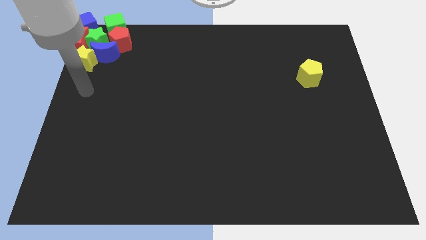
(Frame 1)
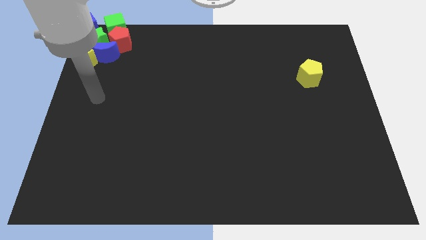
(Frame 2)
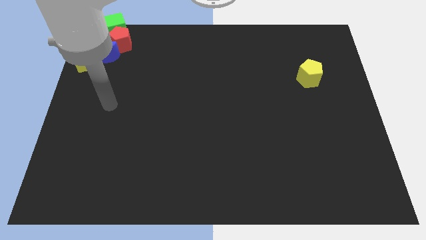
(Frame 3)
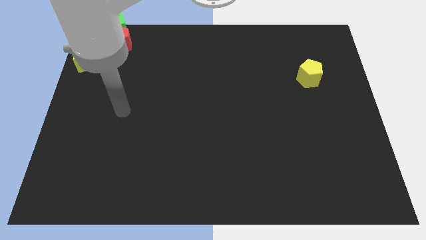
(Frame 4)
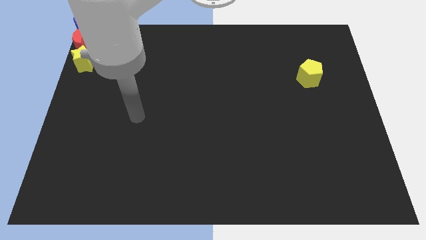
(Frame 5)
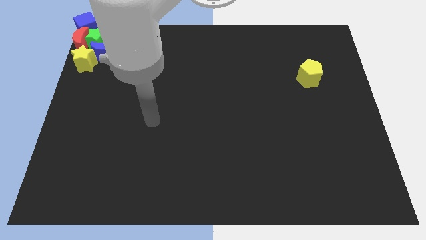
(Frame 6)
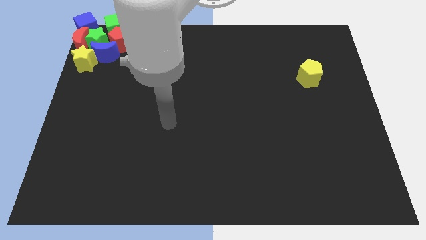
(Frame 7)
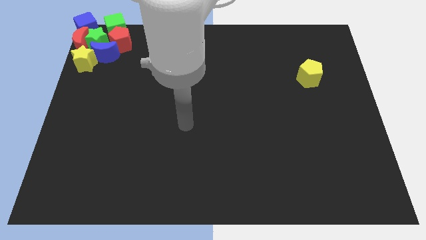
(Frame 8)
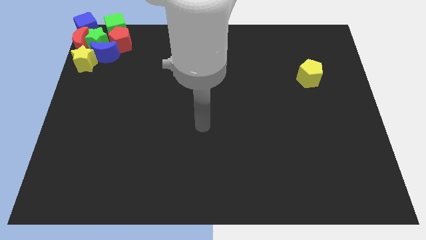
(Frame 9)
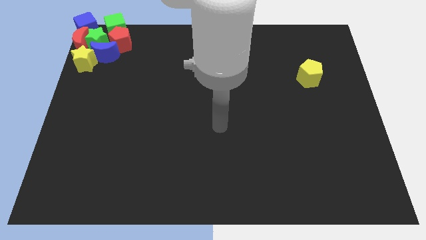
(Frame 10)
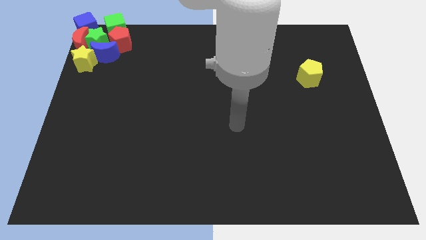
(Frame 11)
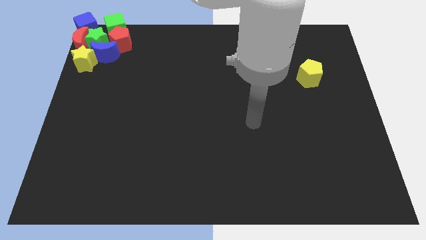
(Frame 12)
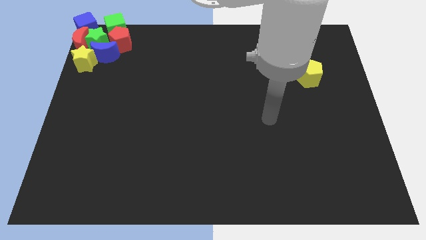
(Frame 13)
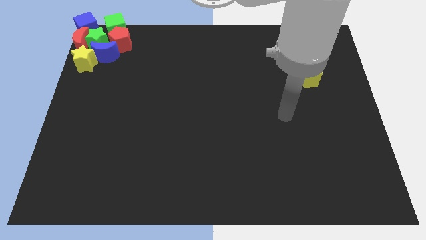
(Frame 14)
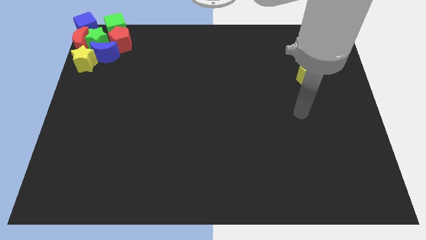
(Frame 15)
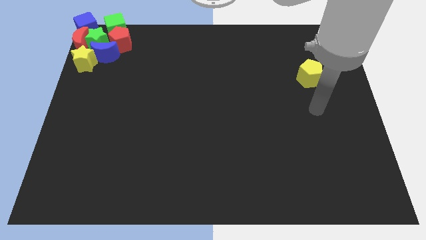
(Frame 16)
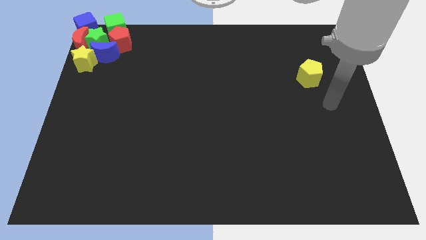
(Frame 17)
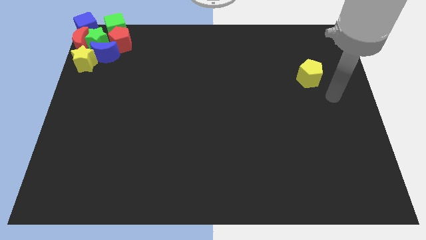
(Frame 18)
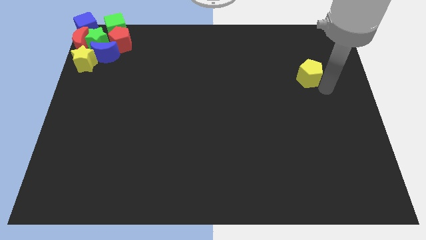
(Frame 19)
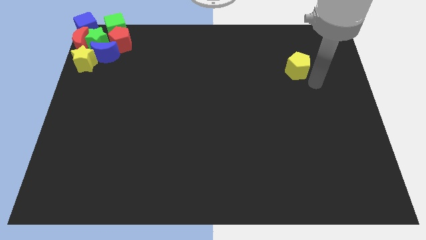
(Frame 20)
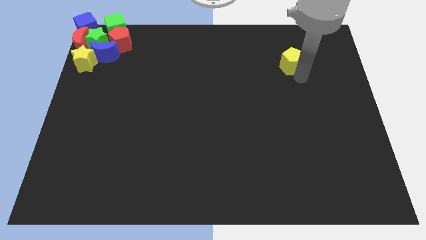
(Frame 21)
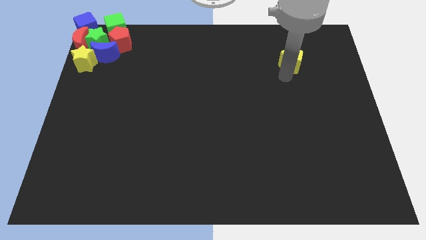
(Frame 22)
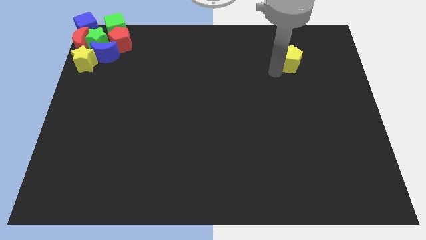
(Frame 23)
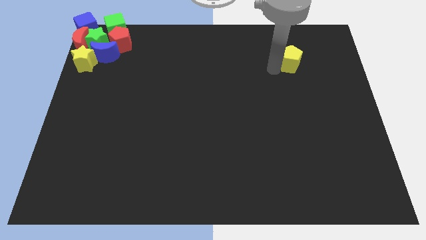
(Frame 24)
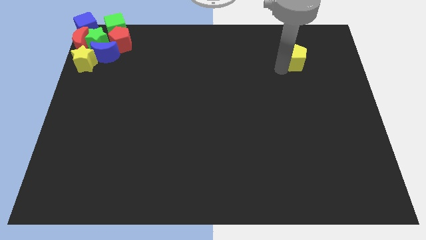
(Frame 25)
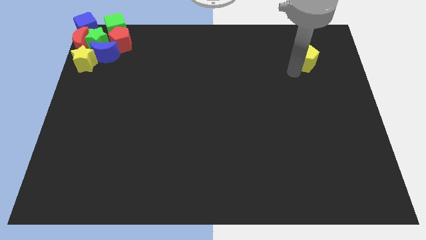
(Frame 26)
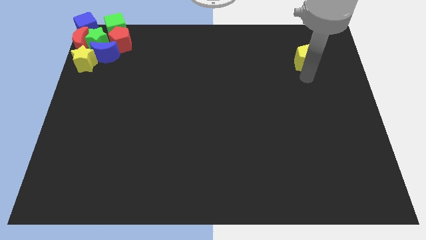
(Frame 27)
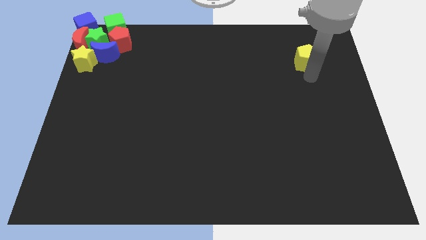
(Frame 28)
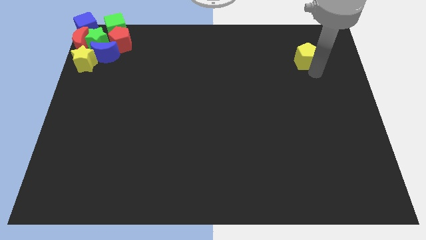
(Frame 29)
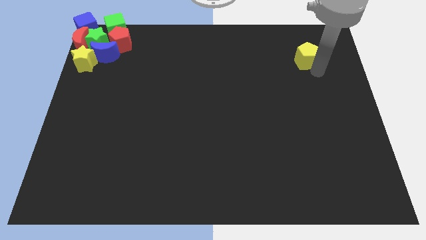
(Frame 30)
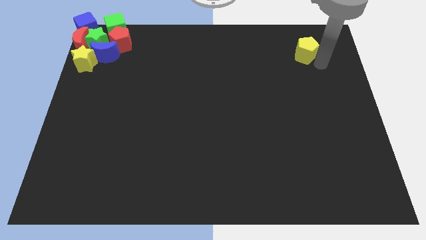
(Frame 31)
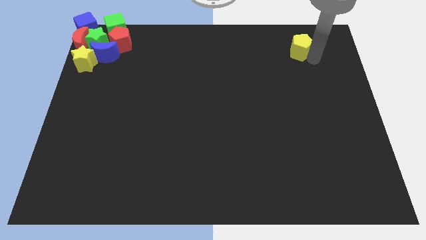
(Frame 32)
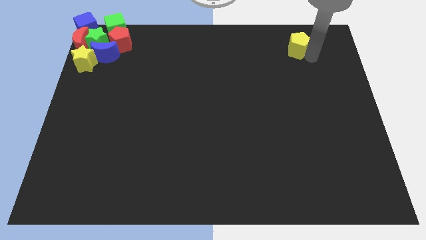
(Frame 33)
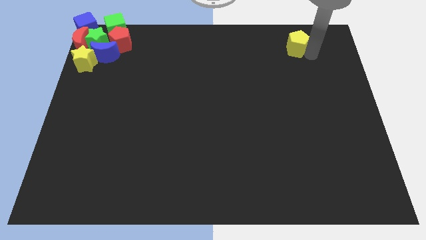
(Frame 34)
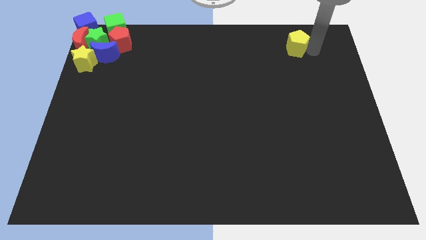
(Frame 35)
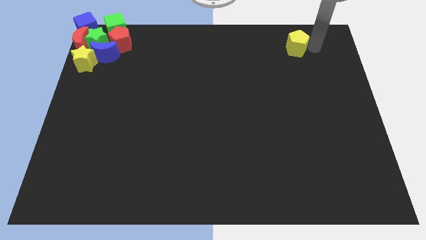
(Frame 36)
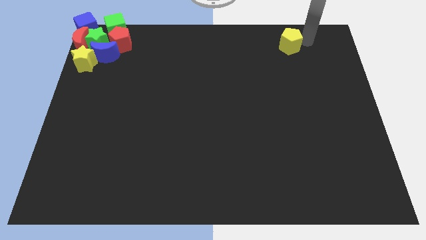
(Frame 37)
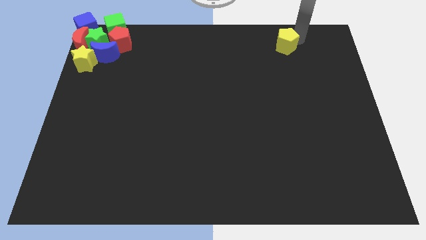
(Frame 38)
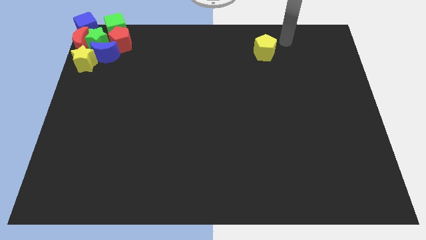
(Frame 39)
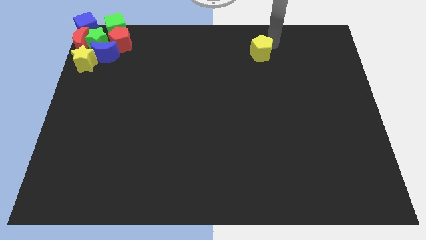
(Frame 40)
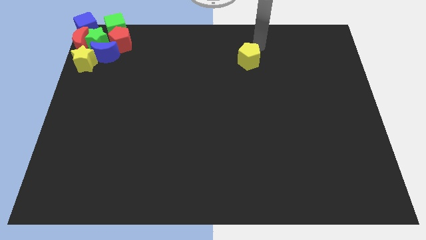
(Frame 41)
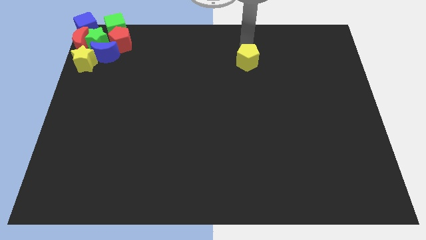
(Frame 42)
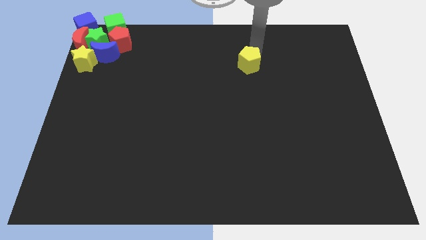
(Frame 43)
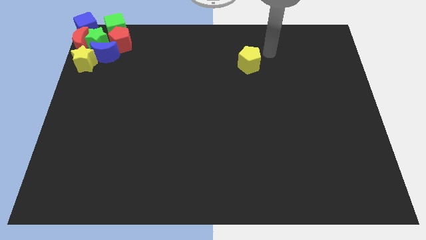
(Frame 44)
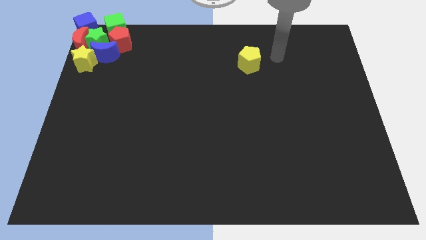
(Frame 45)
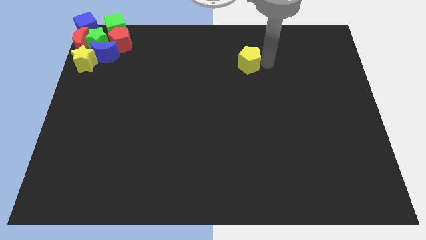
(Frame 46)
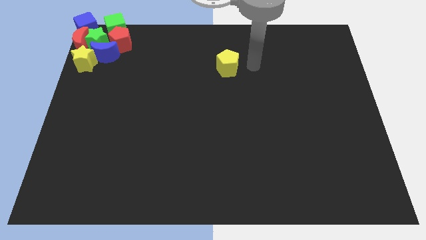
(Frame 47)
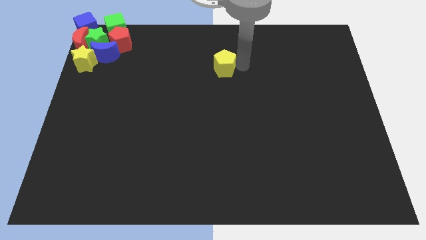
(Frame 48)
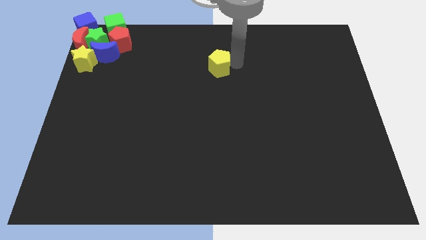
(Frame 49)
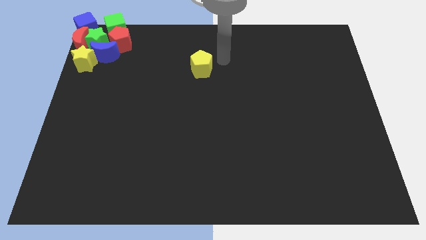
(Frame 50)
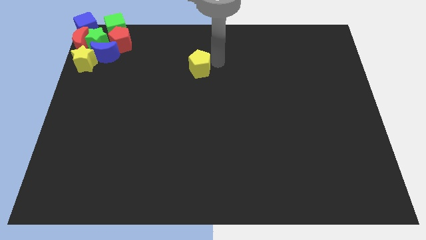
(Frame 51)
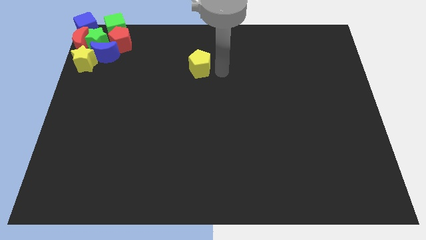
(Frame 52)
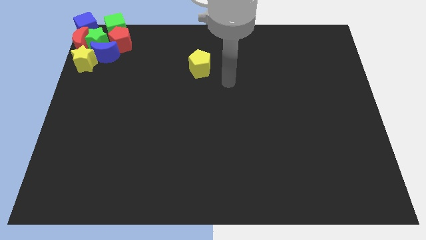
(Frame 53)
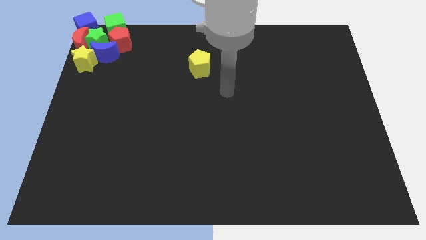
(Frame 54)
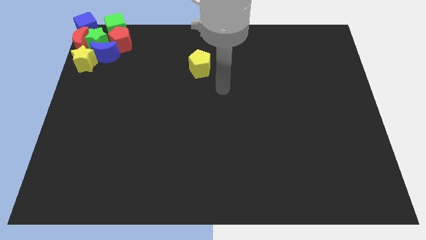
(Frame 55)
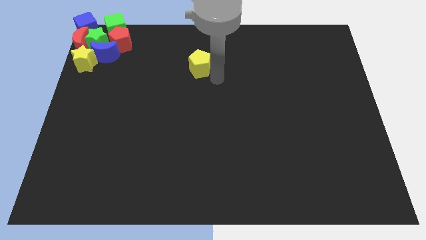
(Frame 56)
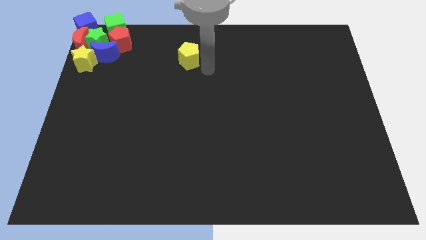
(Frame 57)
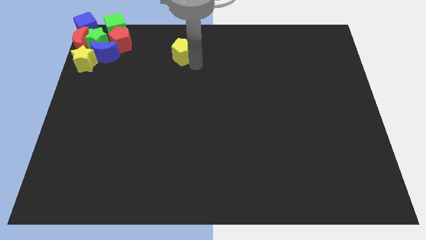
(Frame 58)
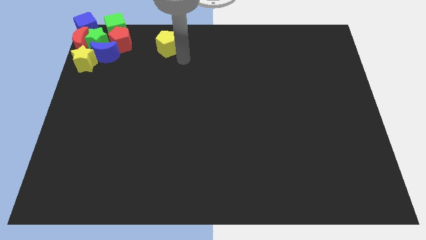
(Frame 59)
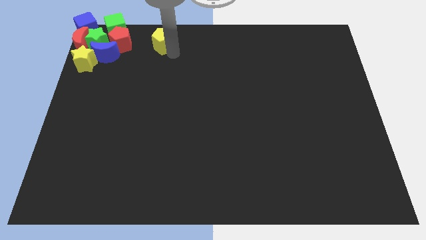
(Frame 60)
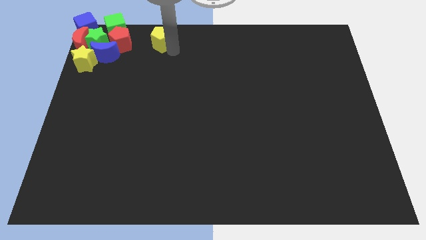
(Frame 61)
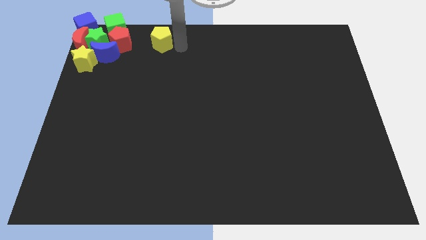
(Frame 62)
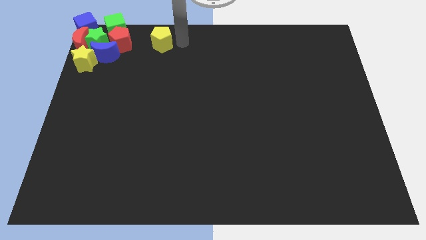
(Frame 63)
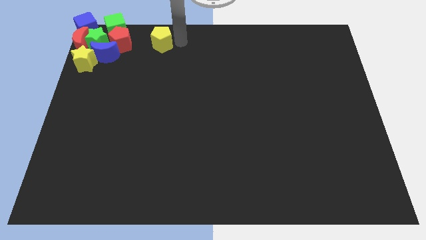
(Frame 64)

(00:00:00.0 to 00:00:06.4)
slide the yellow pentagon towards the group of blocks

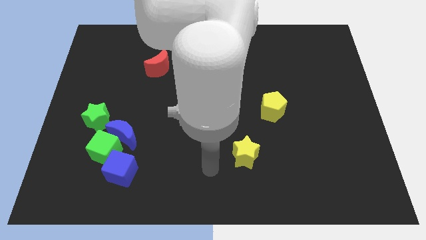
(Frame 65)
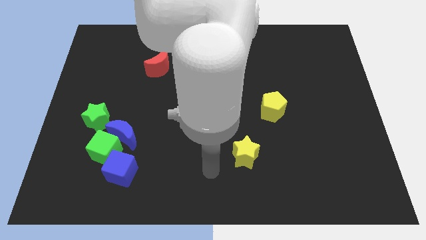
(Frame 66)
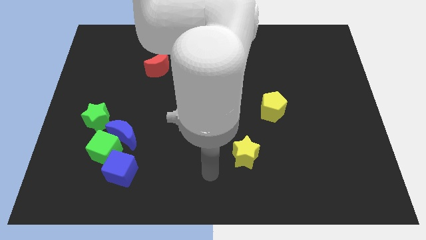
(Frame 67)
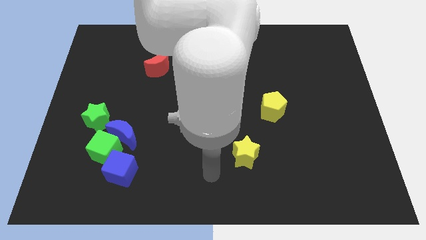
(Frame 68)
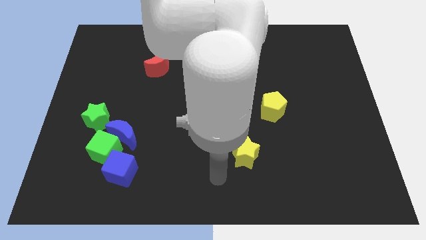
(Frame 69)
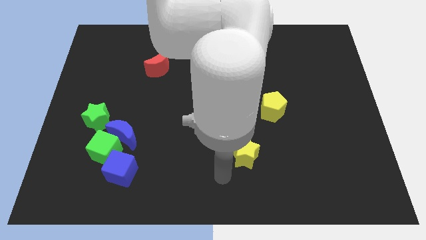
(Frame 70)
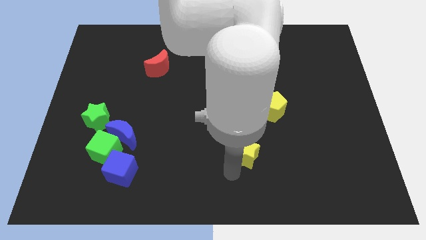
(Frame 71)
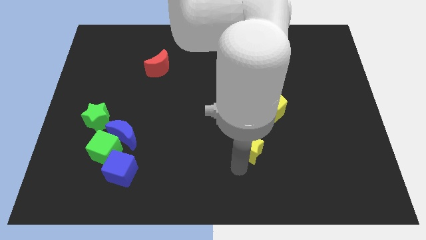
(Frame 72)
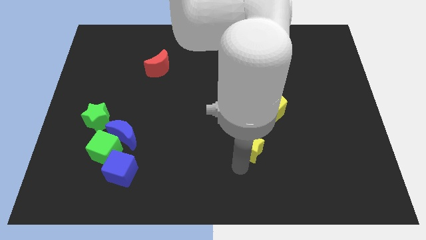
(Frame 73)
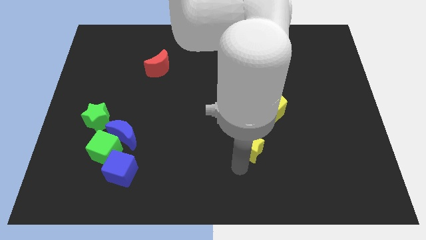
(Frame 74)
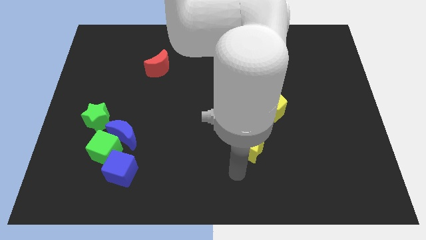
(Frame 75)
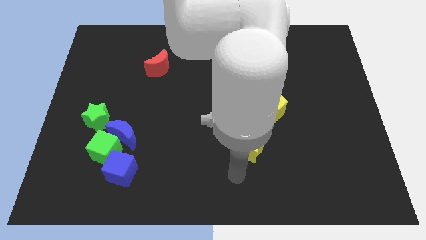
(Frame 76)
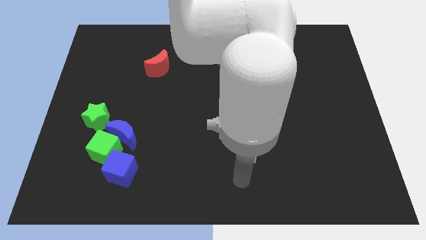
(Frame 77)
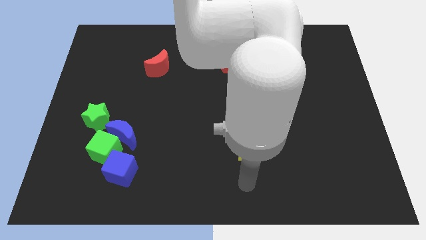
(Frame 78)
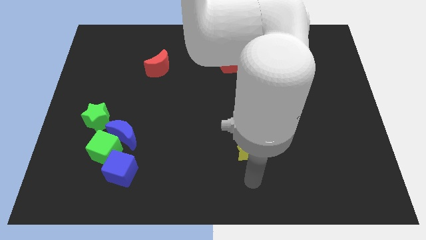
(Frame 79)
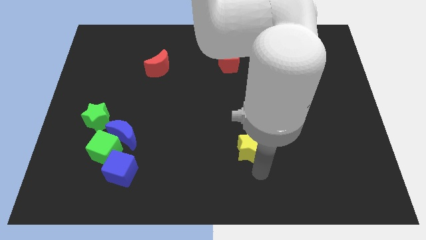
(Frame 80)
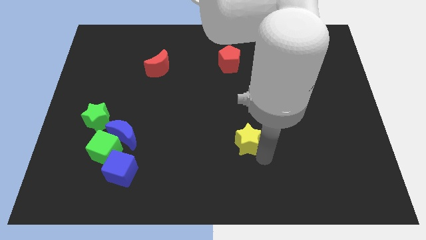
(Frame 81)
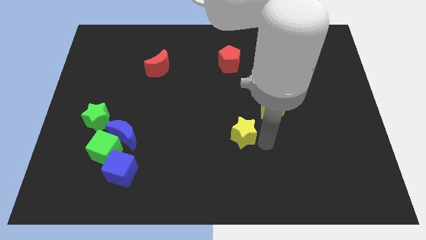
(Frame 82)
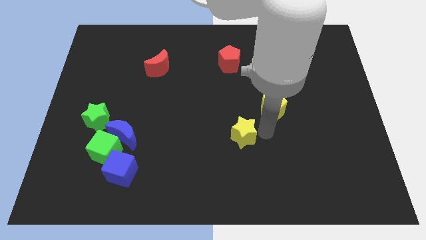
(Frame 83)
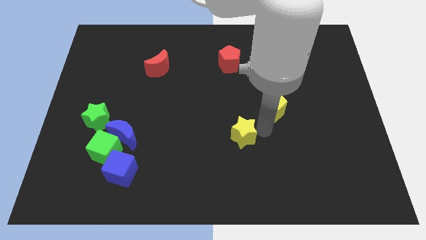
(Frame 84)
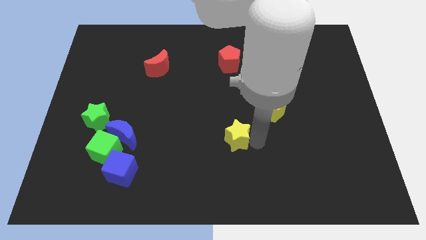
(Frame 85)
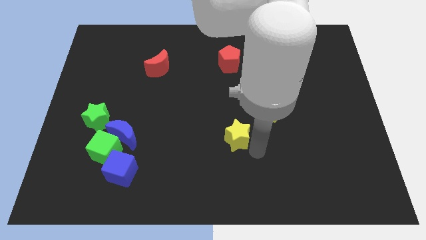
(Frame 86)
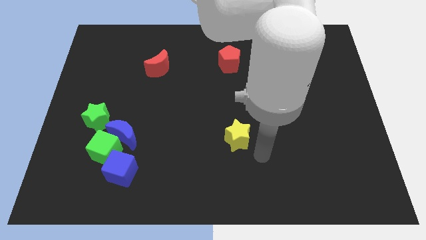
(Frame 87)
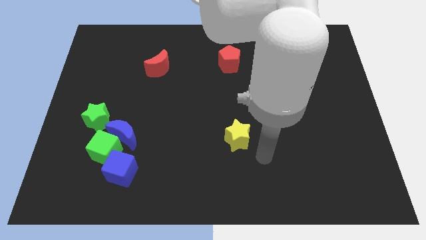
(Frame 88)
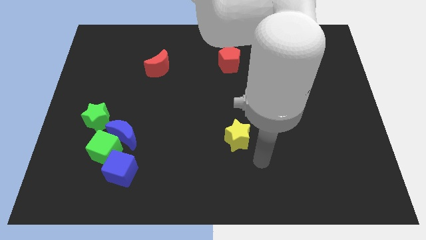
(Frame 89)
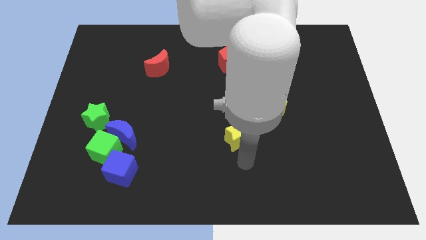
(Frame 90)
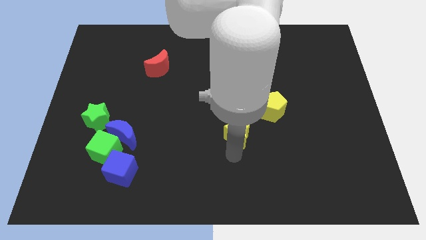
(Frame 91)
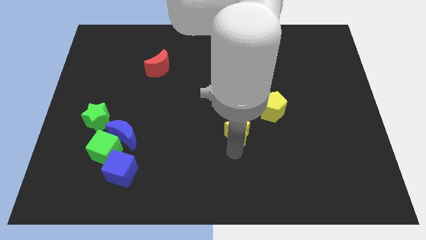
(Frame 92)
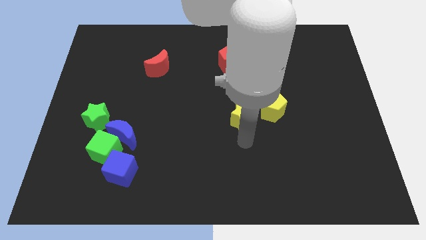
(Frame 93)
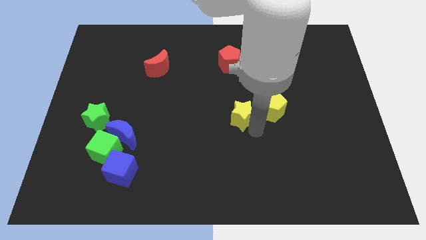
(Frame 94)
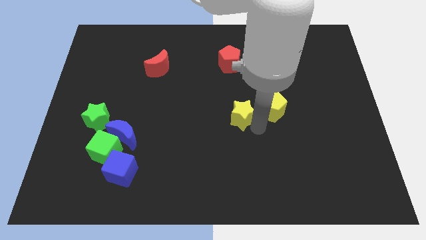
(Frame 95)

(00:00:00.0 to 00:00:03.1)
move the yellow star at the center of the board
